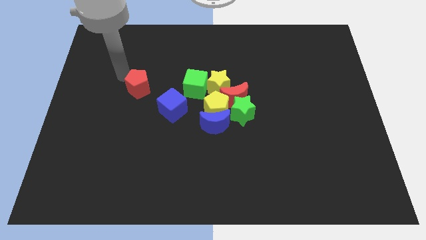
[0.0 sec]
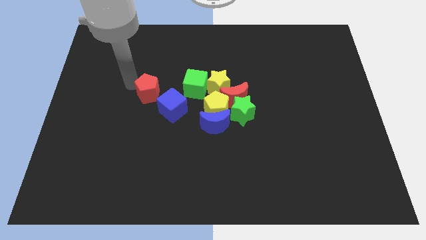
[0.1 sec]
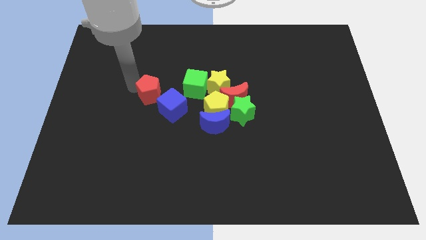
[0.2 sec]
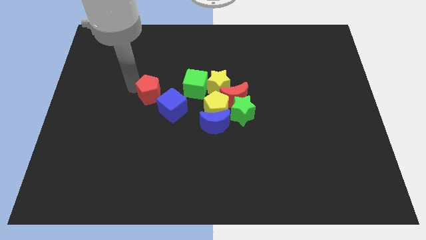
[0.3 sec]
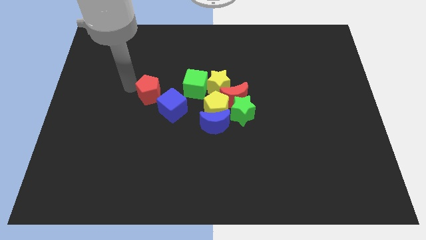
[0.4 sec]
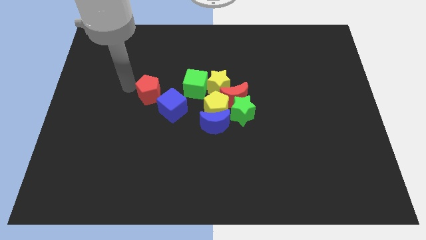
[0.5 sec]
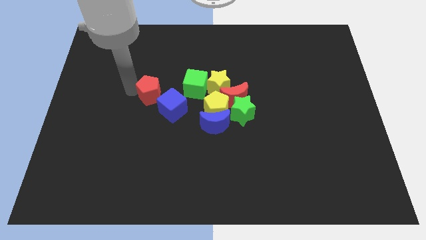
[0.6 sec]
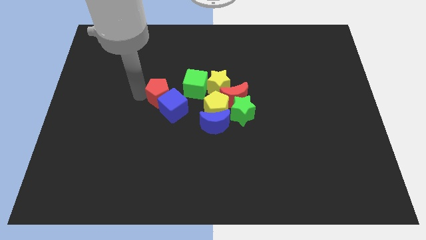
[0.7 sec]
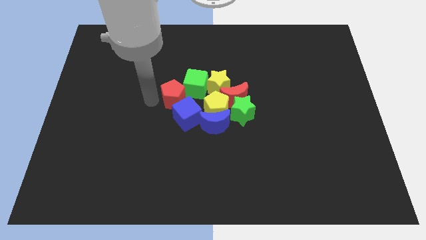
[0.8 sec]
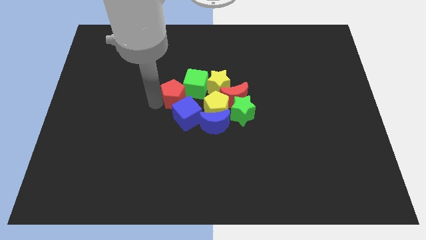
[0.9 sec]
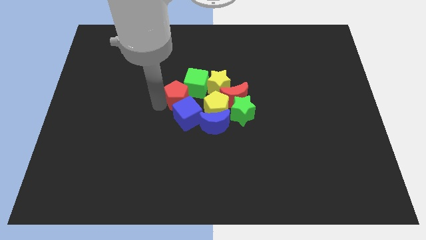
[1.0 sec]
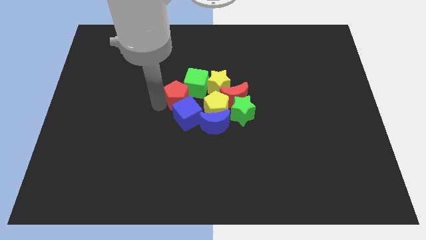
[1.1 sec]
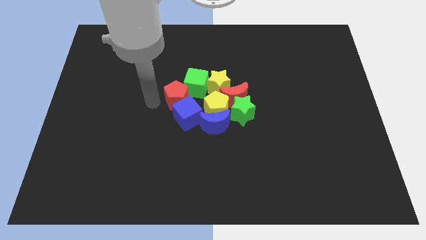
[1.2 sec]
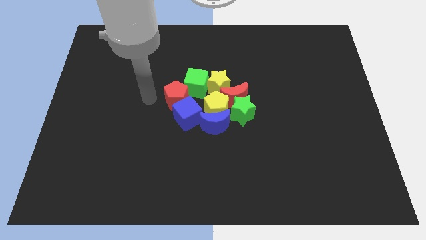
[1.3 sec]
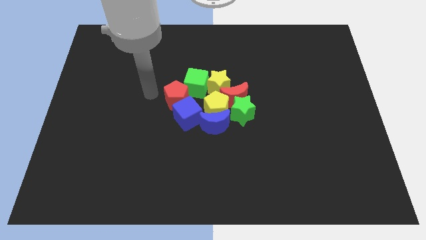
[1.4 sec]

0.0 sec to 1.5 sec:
push the red pentagon to the bottom left side of the green cube

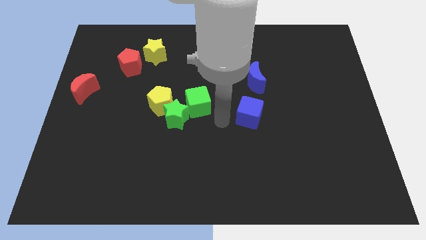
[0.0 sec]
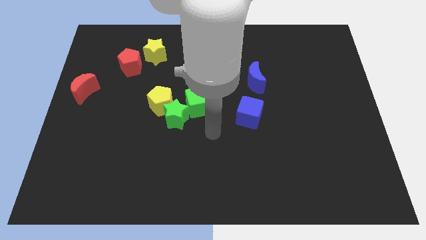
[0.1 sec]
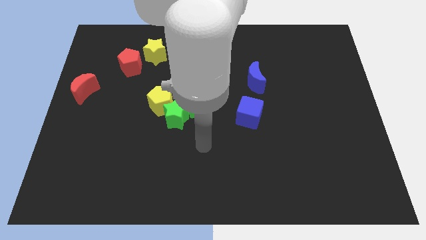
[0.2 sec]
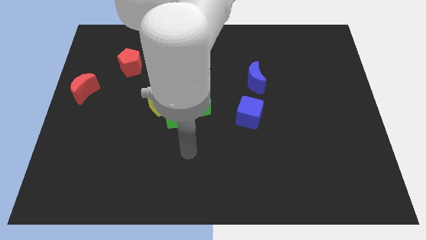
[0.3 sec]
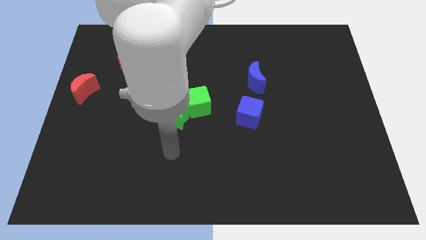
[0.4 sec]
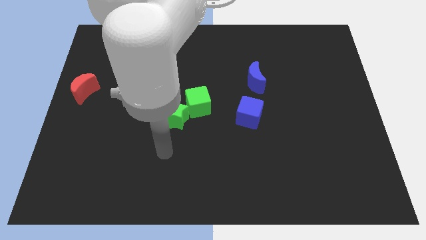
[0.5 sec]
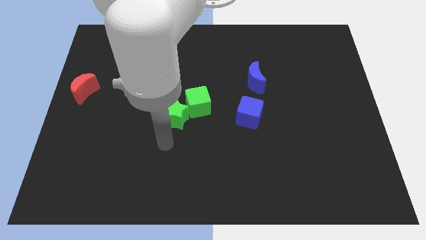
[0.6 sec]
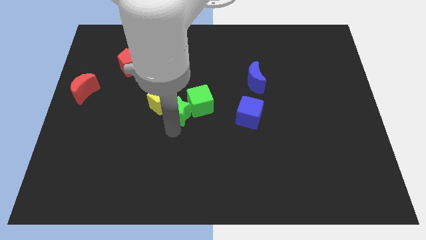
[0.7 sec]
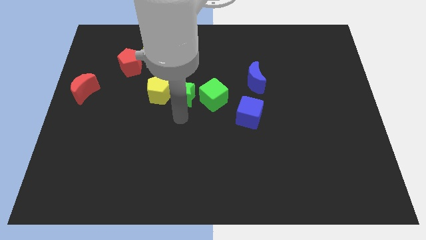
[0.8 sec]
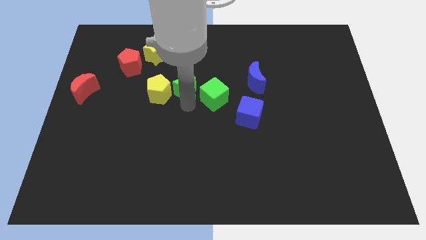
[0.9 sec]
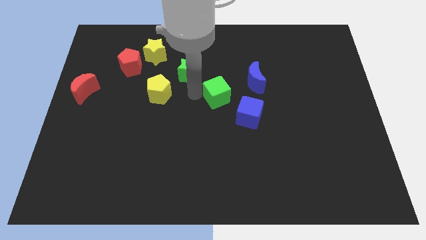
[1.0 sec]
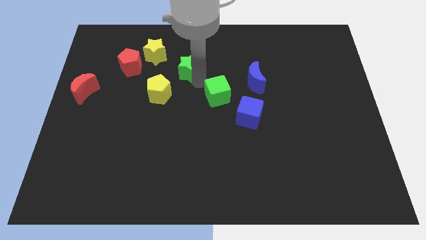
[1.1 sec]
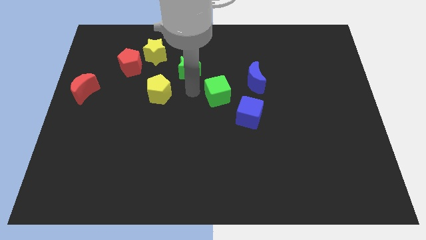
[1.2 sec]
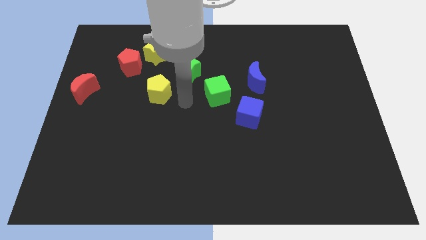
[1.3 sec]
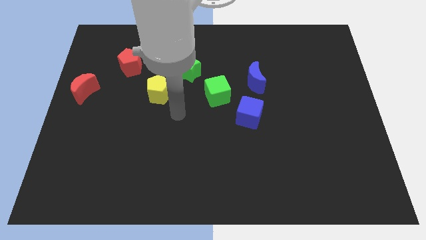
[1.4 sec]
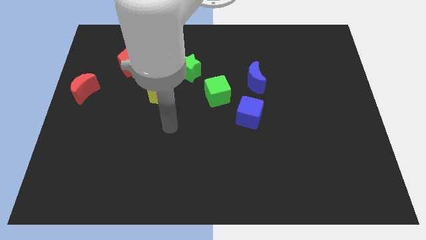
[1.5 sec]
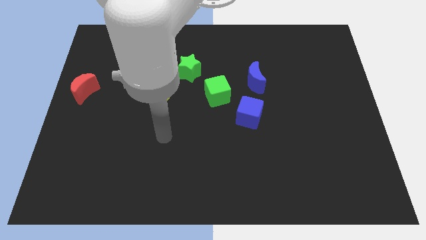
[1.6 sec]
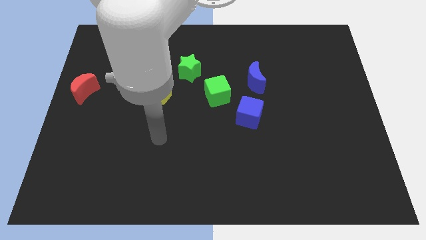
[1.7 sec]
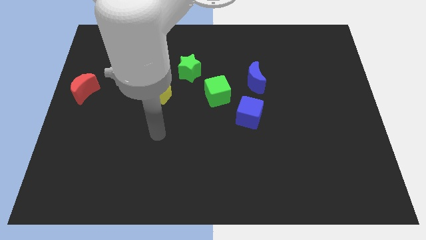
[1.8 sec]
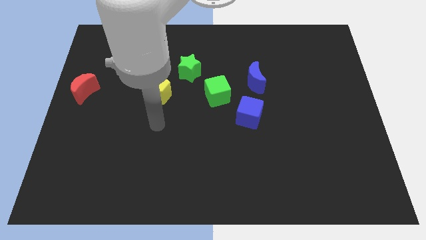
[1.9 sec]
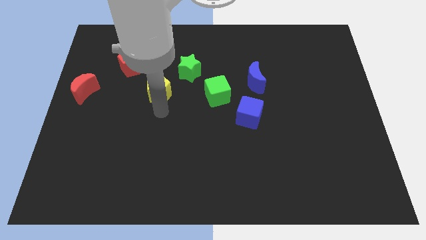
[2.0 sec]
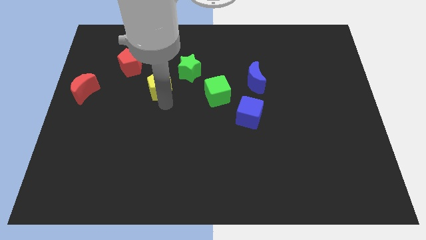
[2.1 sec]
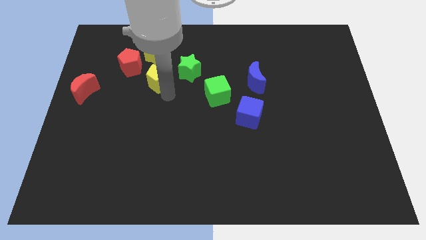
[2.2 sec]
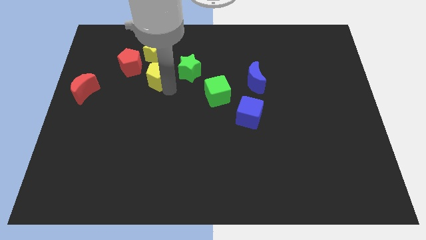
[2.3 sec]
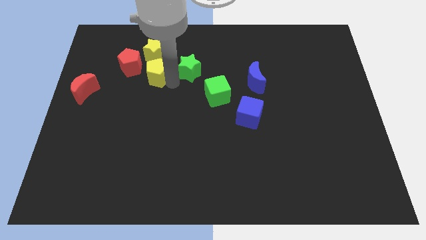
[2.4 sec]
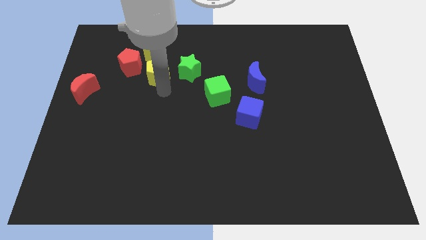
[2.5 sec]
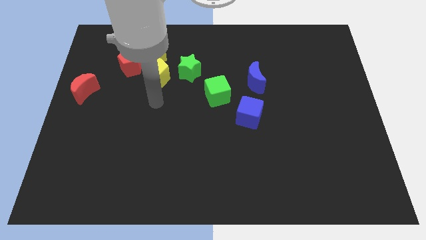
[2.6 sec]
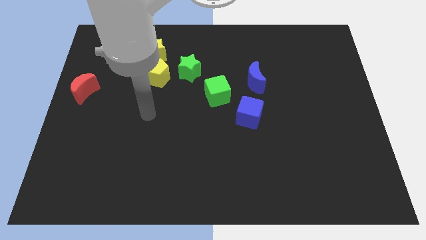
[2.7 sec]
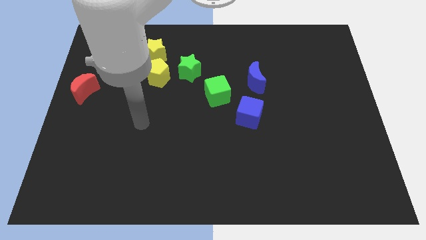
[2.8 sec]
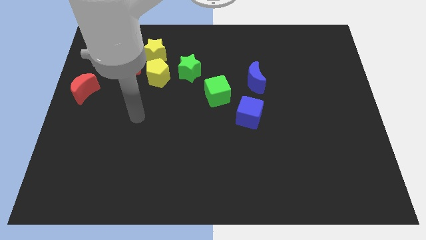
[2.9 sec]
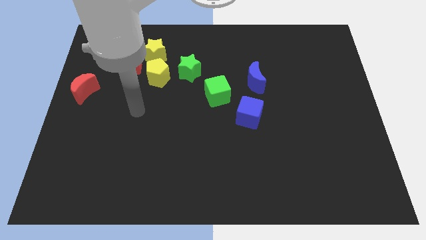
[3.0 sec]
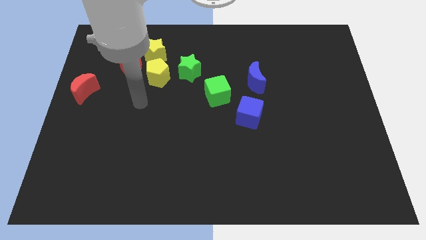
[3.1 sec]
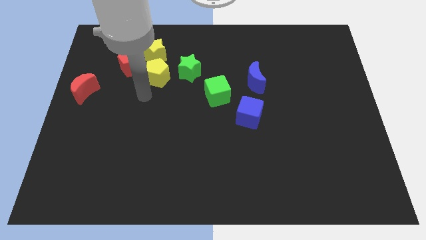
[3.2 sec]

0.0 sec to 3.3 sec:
push the green star and yellow pentagon to the top side of the board

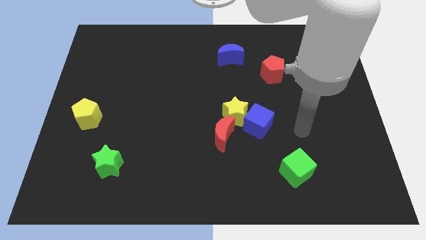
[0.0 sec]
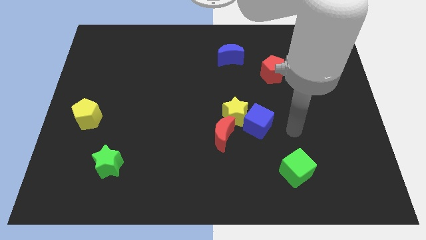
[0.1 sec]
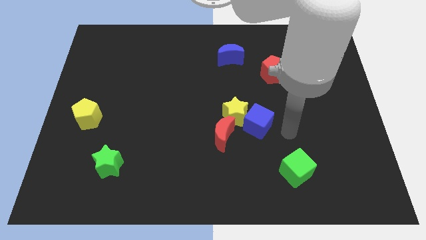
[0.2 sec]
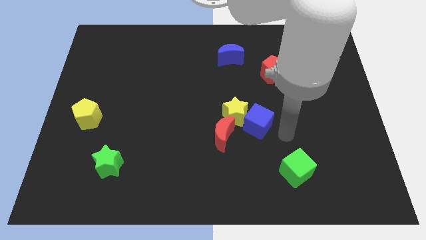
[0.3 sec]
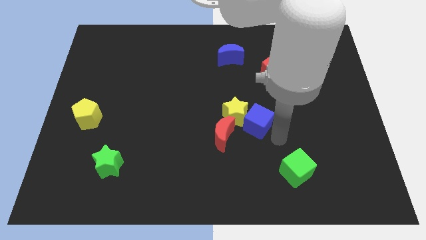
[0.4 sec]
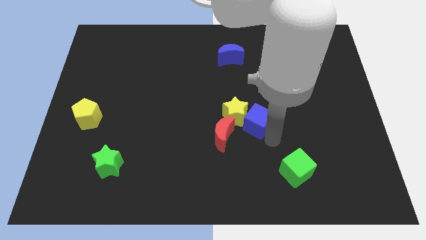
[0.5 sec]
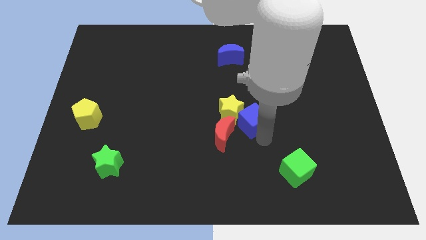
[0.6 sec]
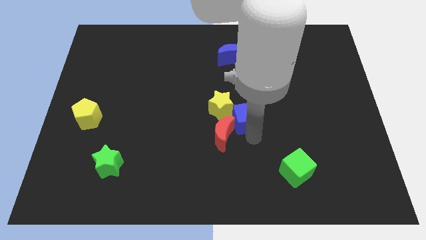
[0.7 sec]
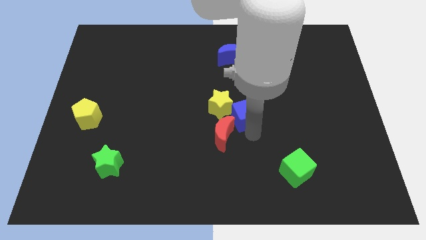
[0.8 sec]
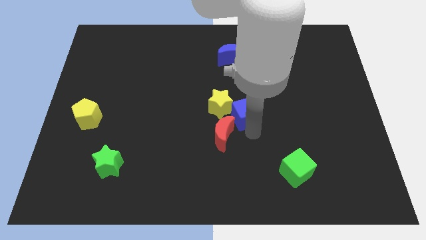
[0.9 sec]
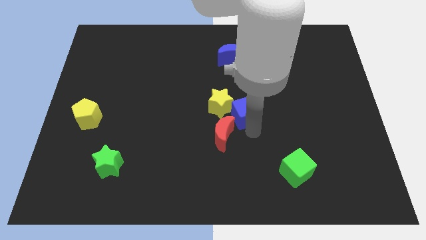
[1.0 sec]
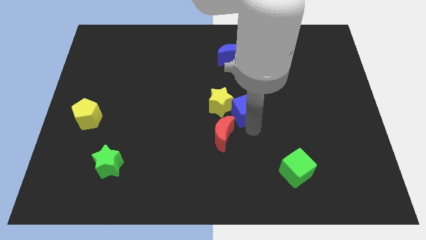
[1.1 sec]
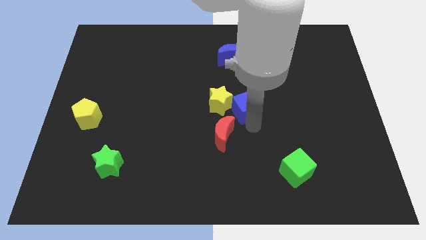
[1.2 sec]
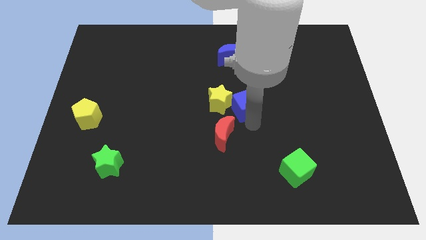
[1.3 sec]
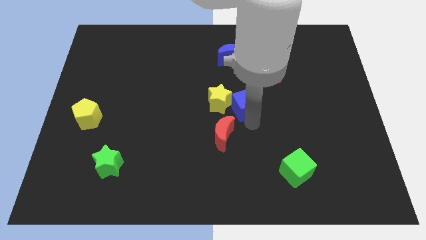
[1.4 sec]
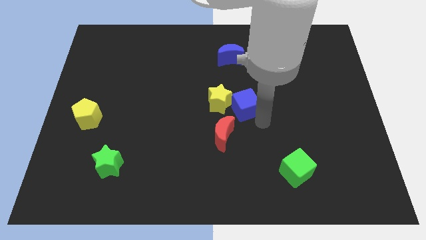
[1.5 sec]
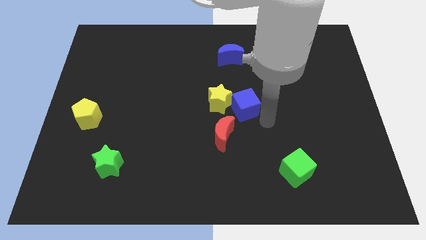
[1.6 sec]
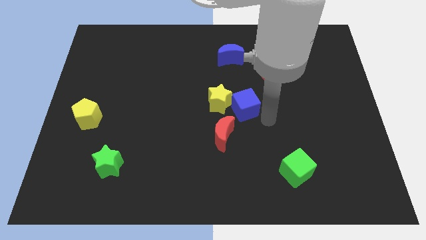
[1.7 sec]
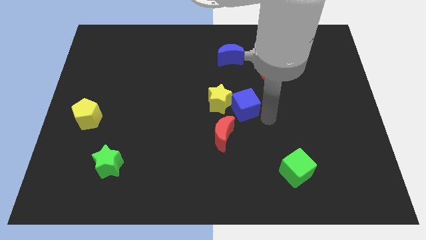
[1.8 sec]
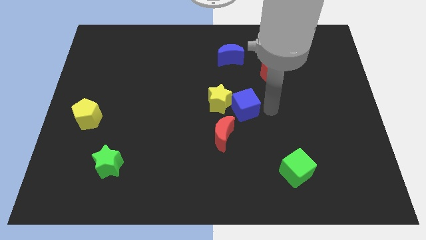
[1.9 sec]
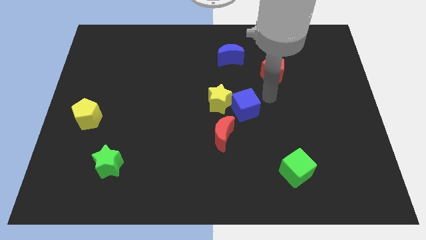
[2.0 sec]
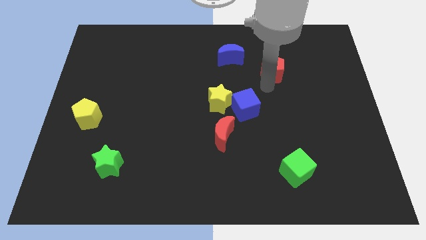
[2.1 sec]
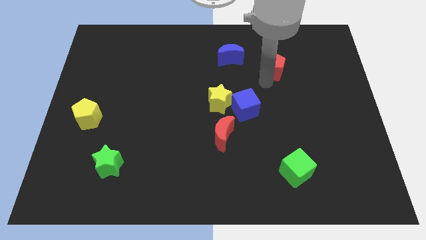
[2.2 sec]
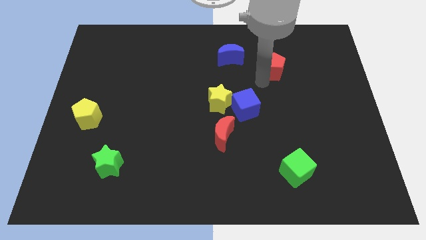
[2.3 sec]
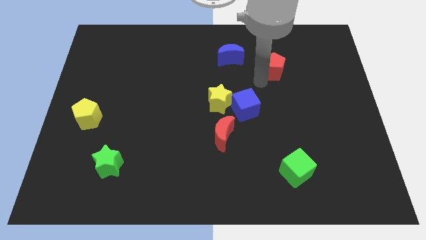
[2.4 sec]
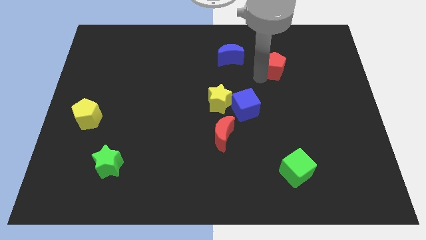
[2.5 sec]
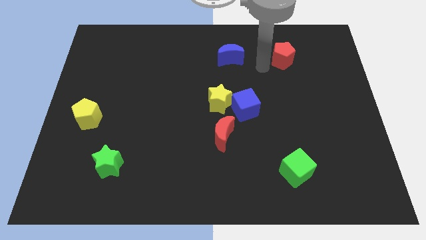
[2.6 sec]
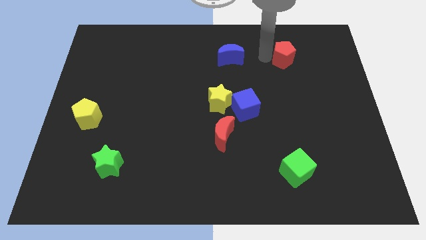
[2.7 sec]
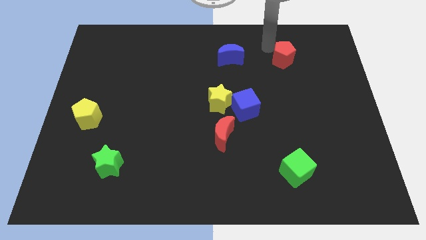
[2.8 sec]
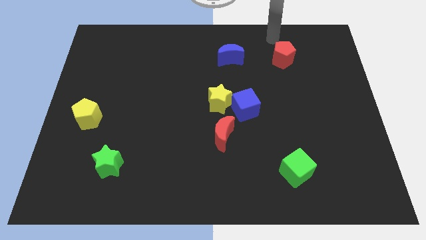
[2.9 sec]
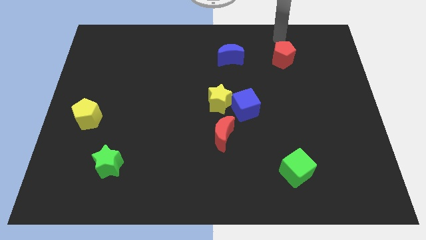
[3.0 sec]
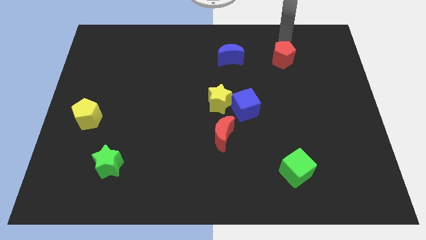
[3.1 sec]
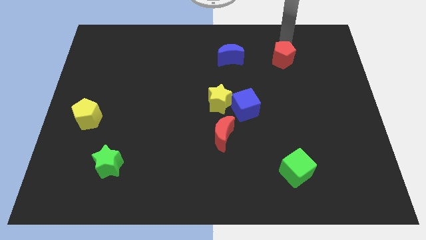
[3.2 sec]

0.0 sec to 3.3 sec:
push blue cube and yellow star to the center of the board

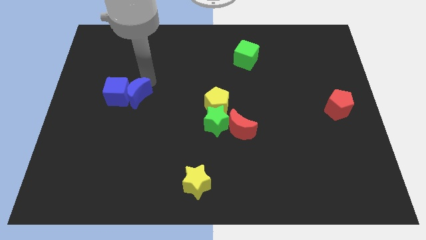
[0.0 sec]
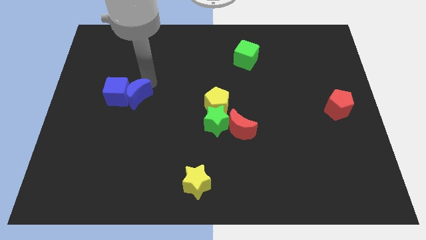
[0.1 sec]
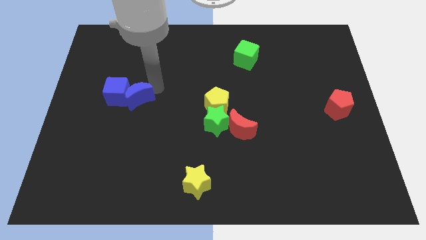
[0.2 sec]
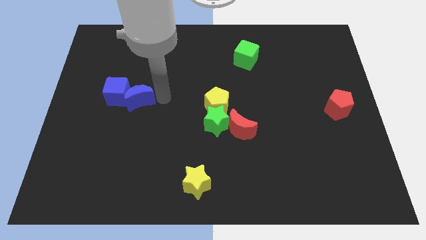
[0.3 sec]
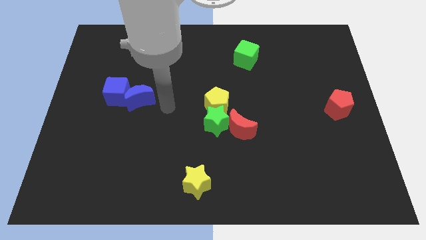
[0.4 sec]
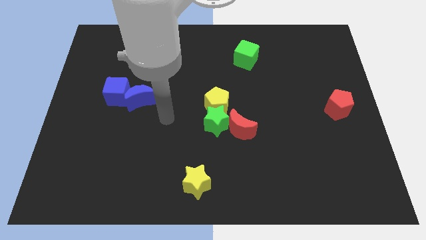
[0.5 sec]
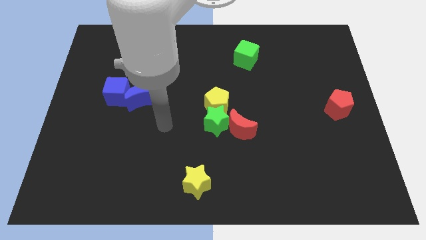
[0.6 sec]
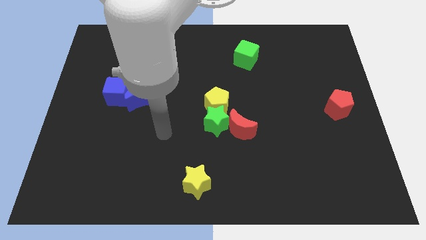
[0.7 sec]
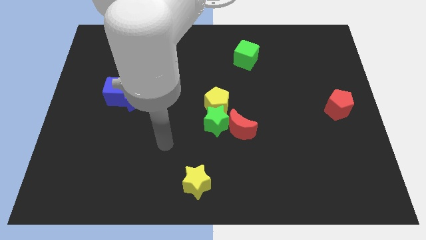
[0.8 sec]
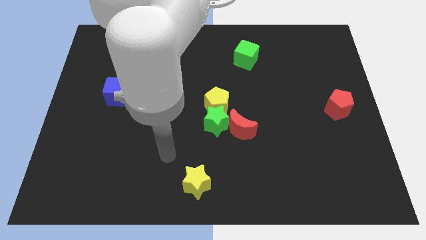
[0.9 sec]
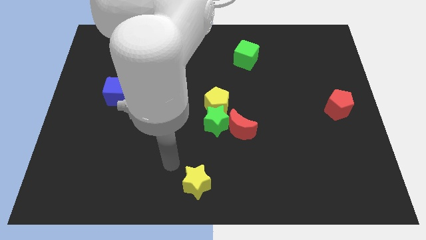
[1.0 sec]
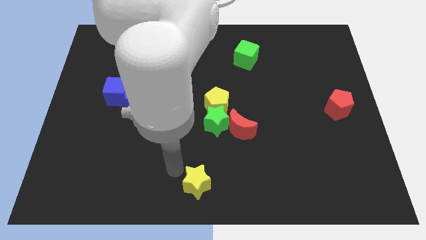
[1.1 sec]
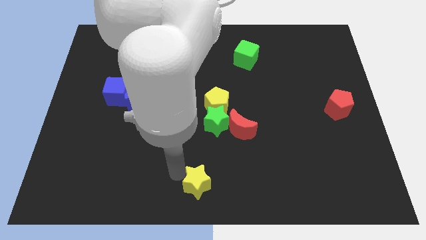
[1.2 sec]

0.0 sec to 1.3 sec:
move blue crescent slightly bottom right of the blue cube
